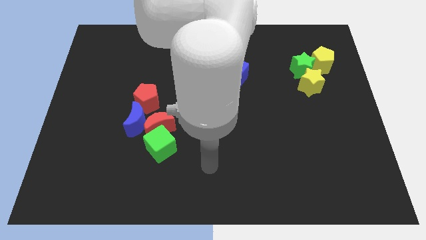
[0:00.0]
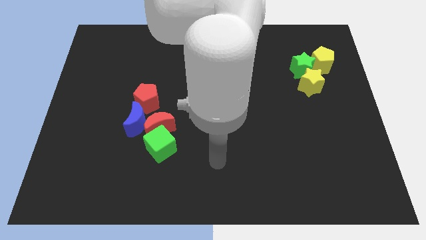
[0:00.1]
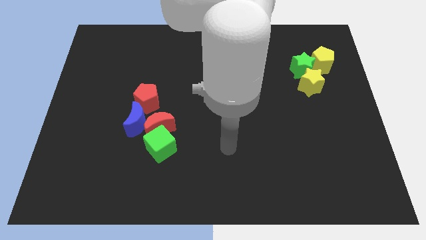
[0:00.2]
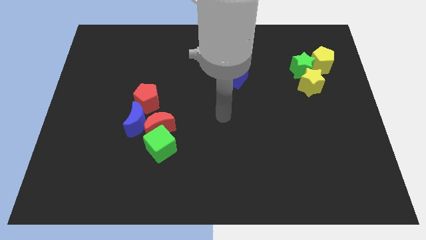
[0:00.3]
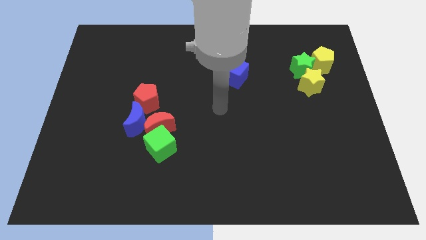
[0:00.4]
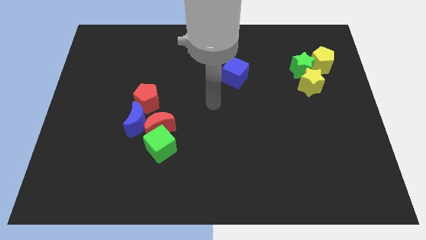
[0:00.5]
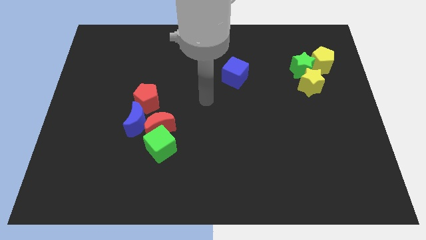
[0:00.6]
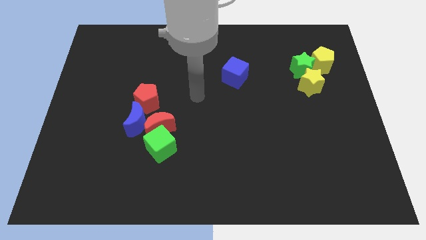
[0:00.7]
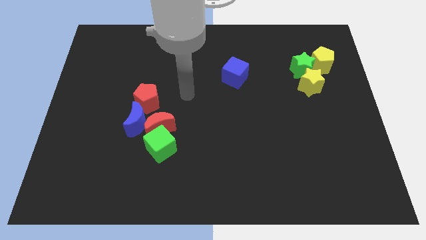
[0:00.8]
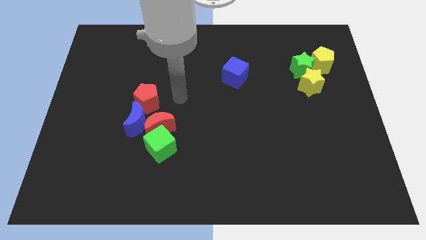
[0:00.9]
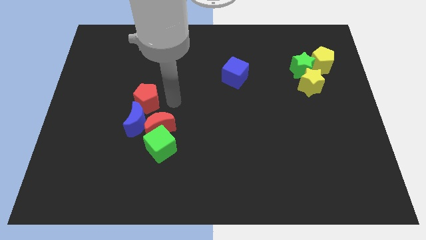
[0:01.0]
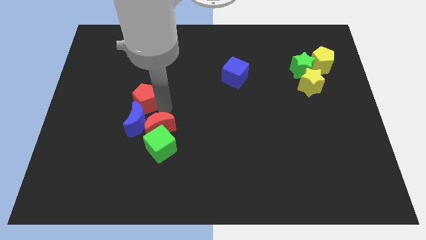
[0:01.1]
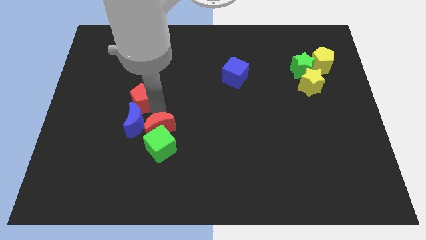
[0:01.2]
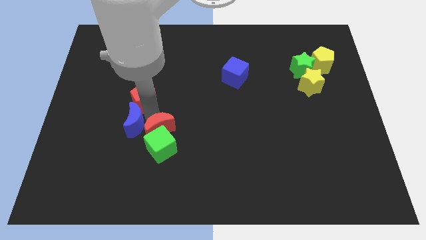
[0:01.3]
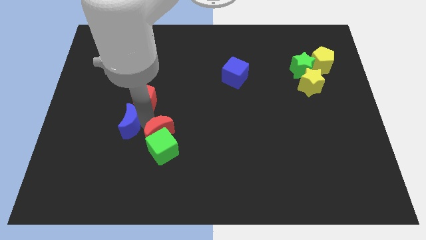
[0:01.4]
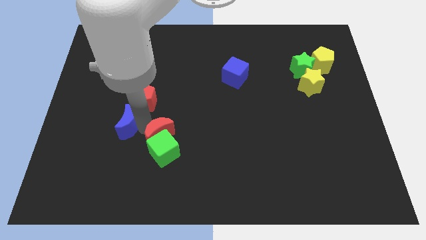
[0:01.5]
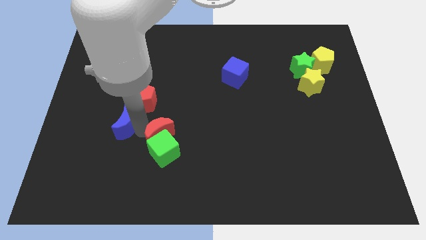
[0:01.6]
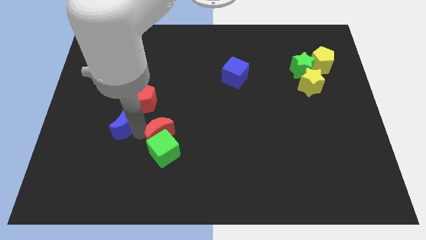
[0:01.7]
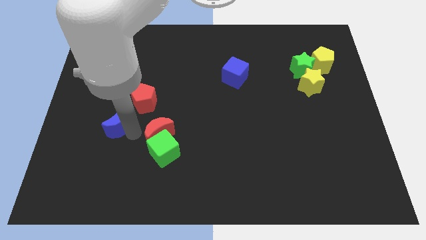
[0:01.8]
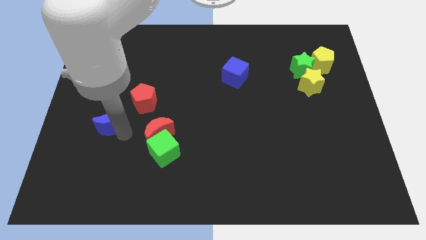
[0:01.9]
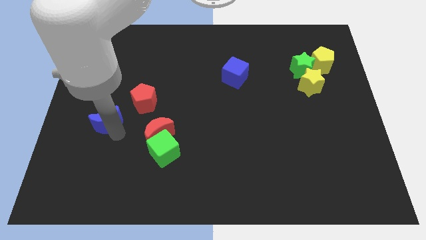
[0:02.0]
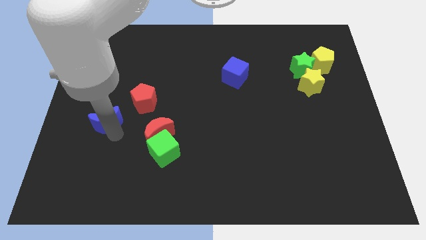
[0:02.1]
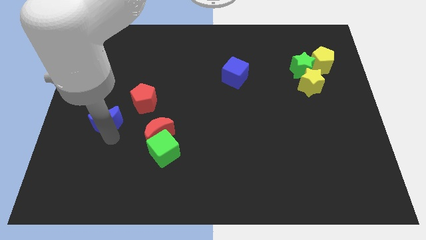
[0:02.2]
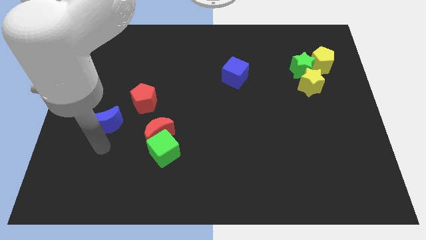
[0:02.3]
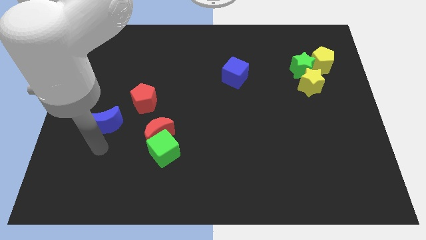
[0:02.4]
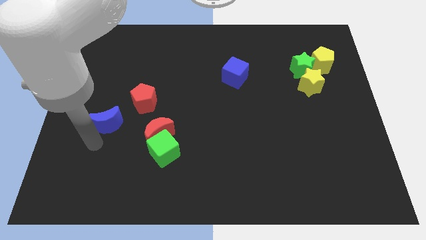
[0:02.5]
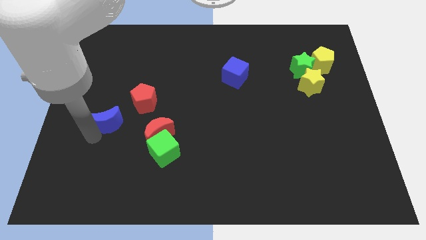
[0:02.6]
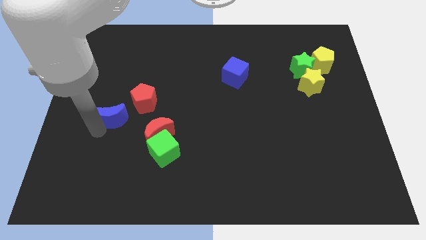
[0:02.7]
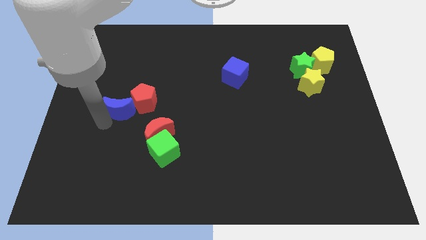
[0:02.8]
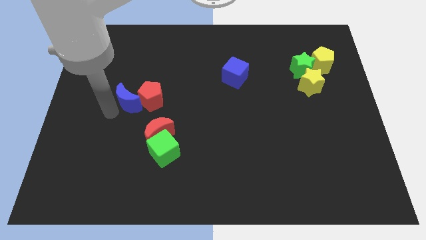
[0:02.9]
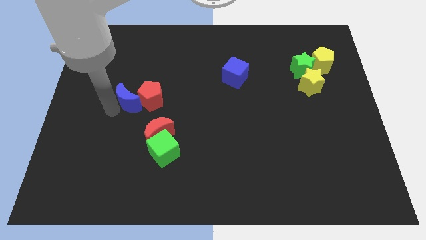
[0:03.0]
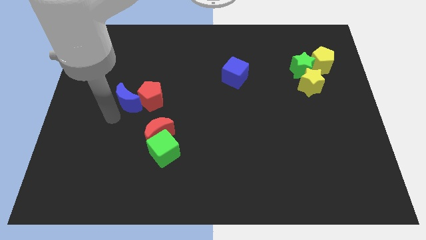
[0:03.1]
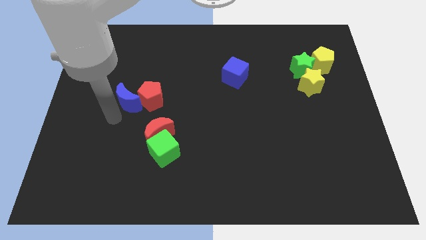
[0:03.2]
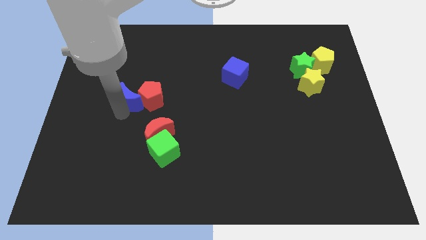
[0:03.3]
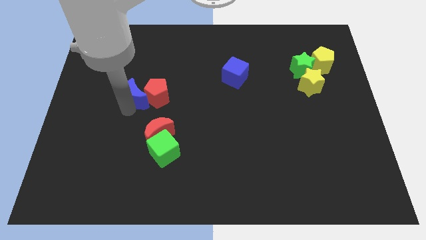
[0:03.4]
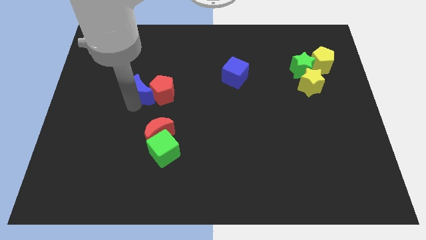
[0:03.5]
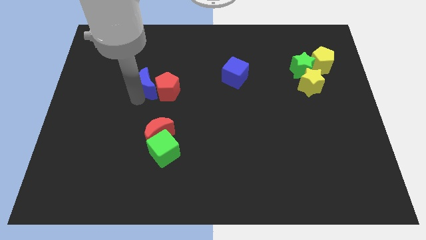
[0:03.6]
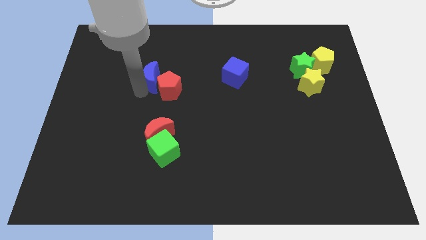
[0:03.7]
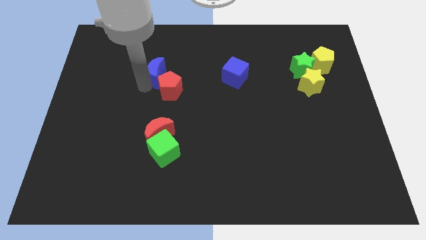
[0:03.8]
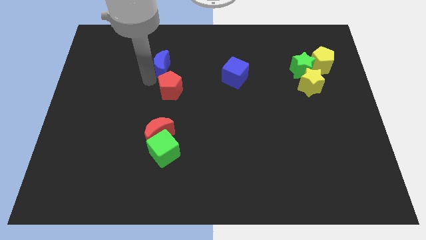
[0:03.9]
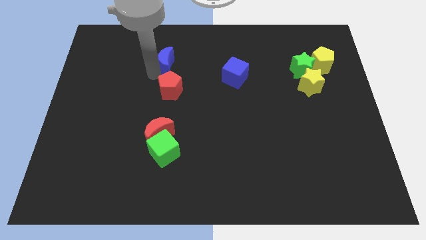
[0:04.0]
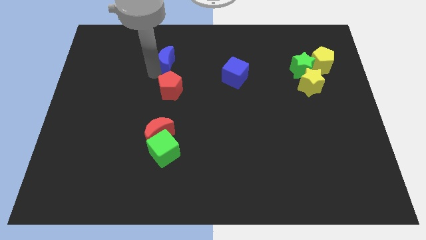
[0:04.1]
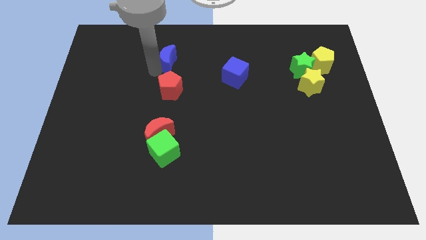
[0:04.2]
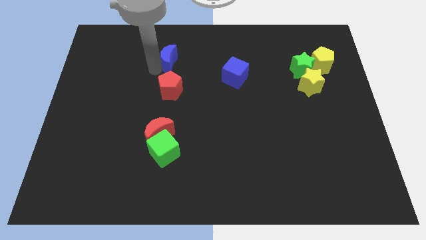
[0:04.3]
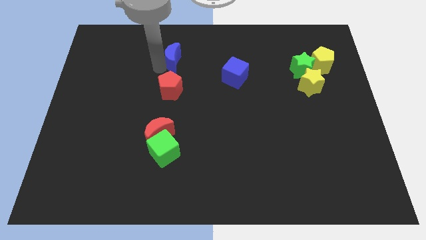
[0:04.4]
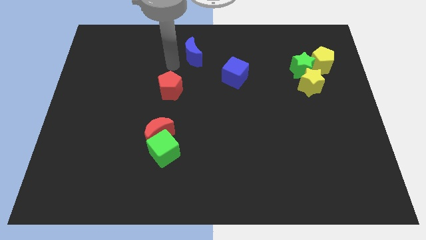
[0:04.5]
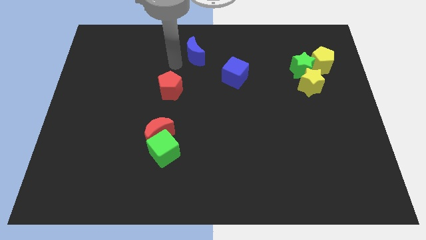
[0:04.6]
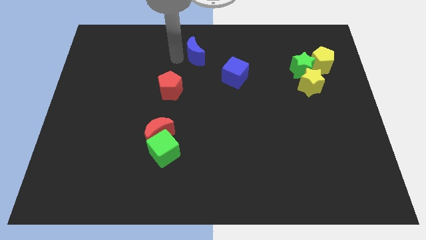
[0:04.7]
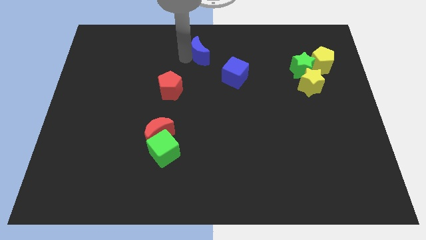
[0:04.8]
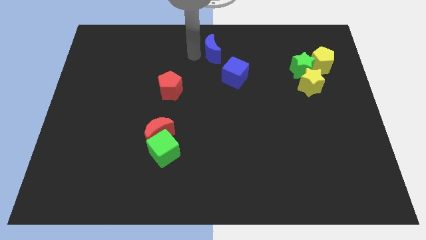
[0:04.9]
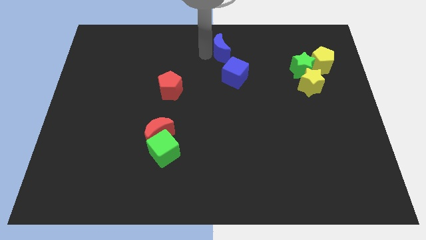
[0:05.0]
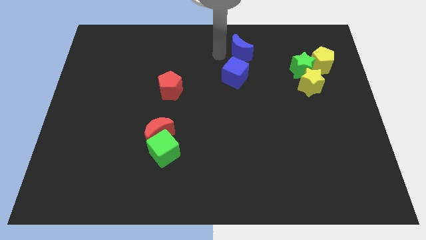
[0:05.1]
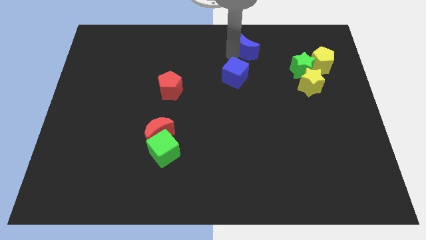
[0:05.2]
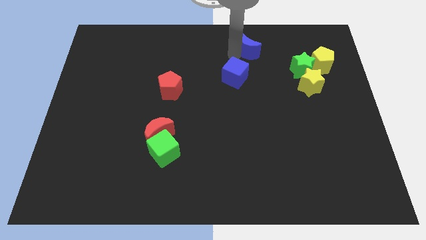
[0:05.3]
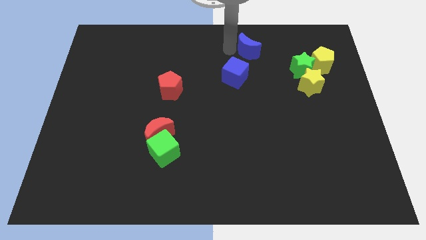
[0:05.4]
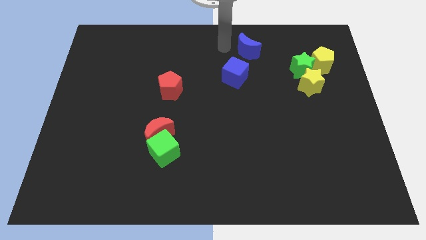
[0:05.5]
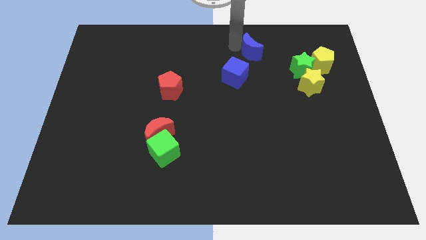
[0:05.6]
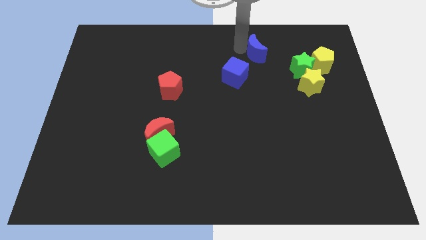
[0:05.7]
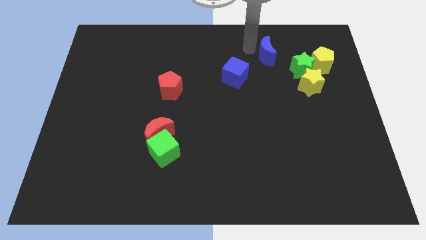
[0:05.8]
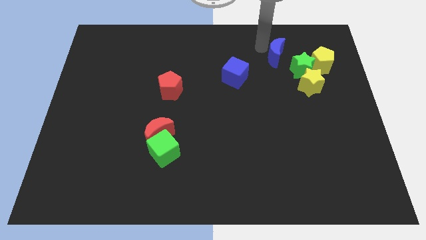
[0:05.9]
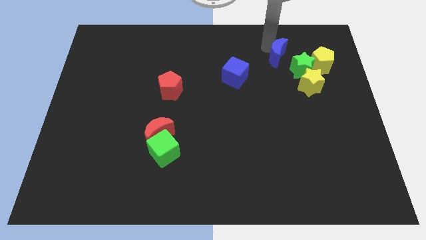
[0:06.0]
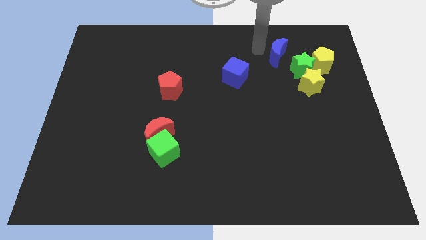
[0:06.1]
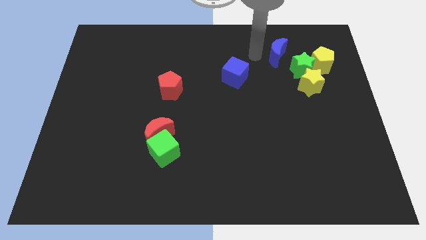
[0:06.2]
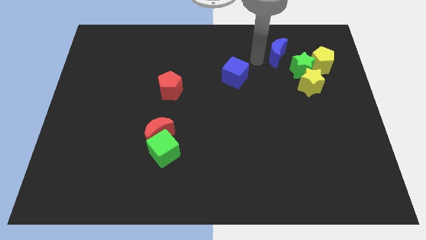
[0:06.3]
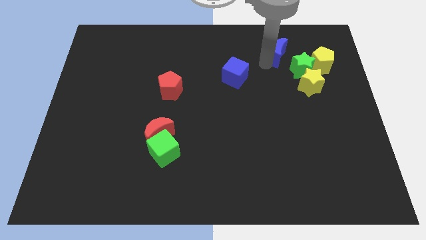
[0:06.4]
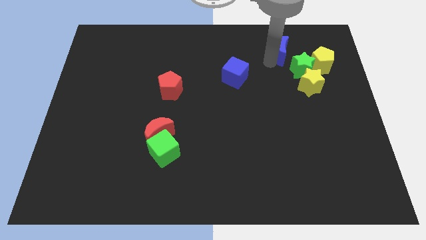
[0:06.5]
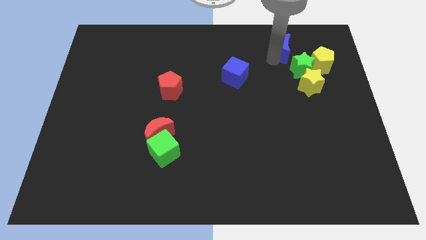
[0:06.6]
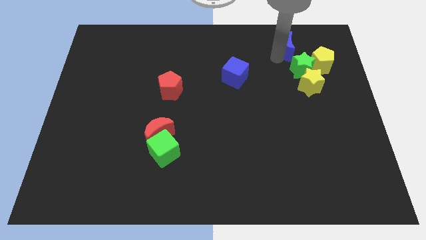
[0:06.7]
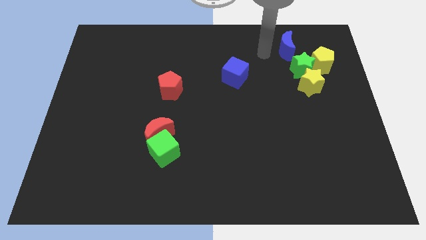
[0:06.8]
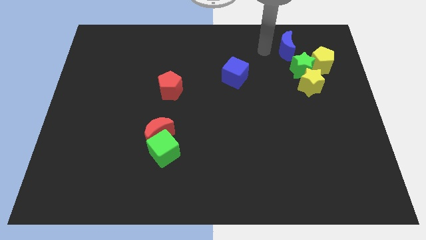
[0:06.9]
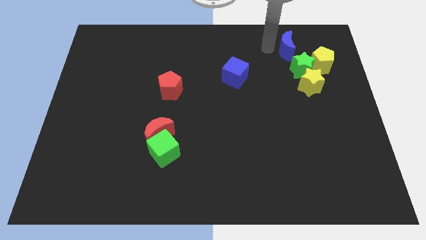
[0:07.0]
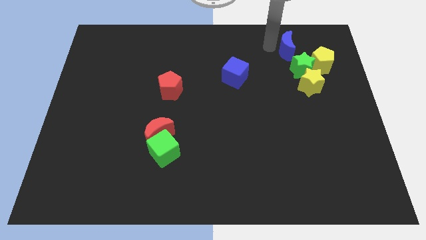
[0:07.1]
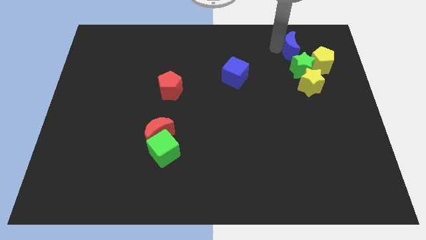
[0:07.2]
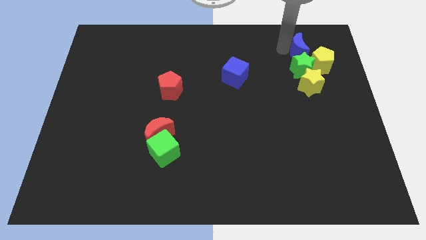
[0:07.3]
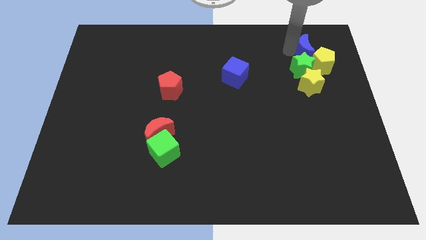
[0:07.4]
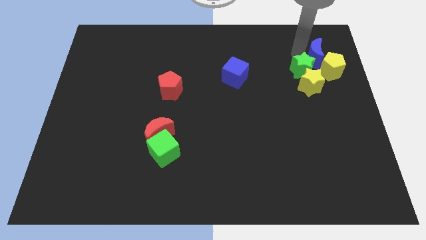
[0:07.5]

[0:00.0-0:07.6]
push the blue moon towards the yellow pentagon

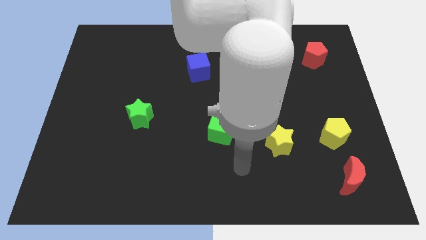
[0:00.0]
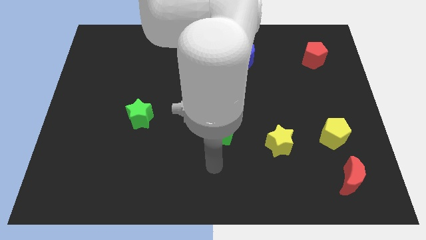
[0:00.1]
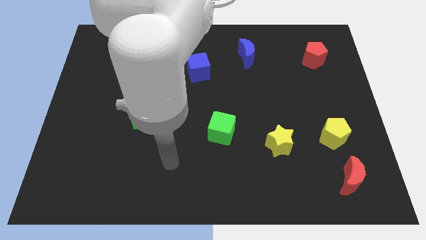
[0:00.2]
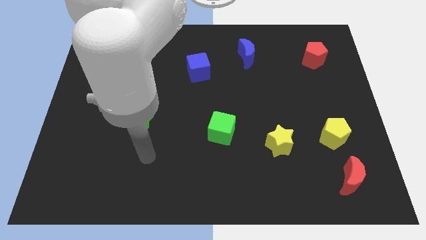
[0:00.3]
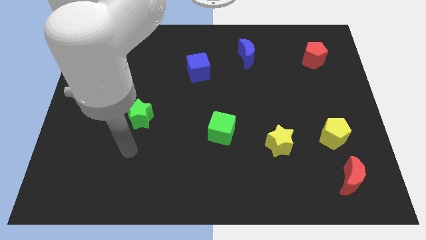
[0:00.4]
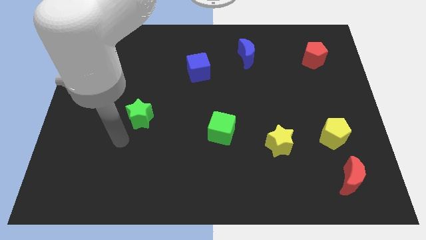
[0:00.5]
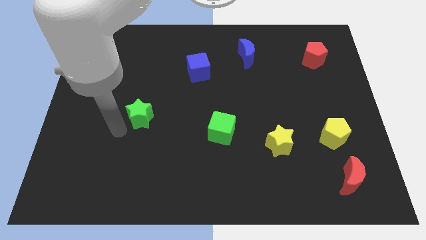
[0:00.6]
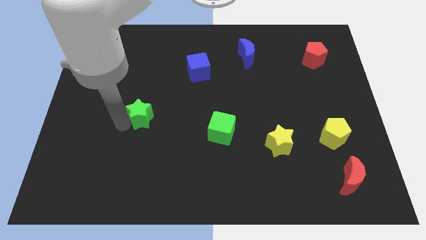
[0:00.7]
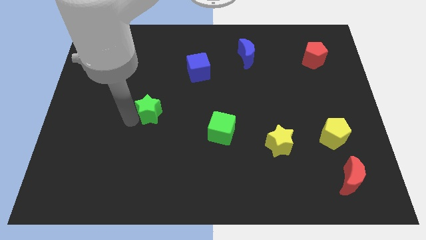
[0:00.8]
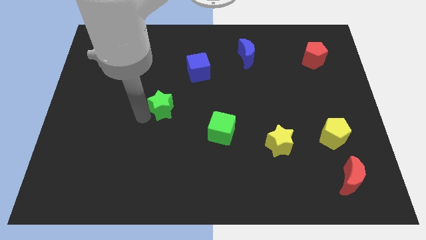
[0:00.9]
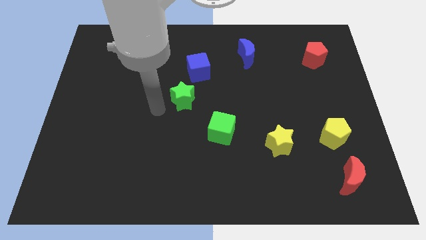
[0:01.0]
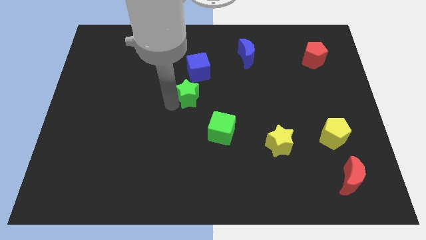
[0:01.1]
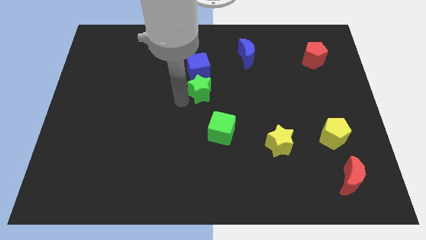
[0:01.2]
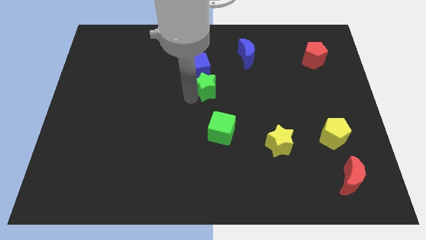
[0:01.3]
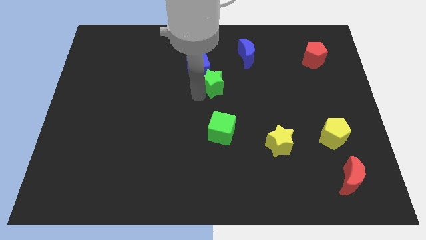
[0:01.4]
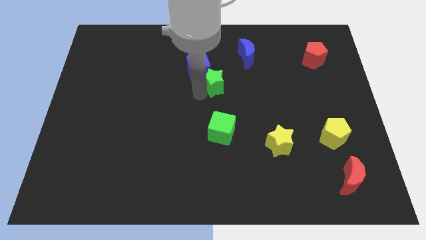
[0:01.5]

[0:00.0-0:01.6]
put the green star towards the blue cube
